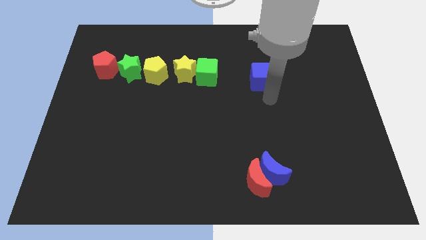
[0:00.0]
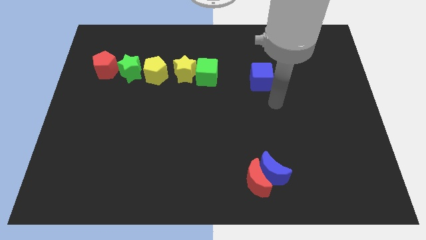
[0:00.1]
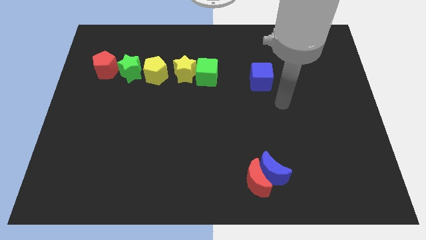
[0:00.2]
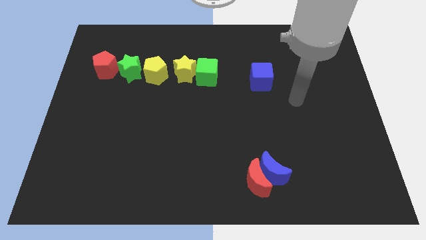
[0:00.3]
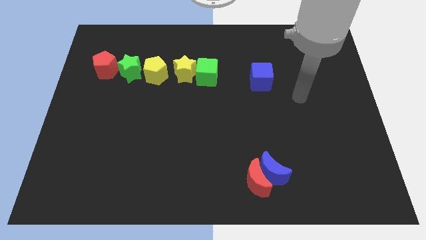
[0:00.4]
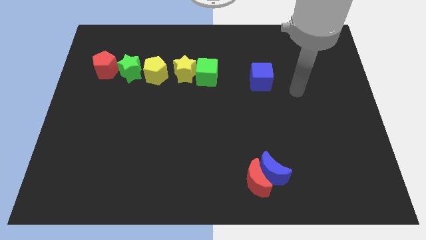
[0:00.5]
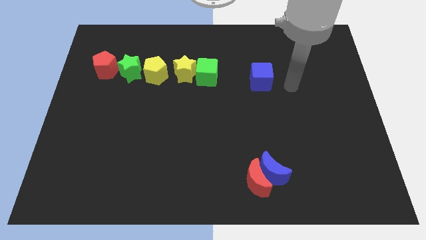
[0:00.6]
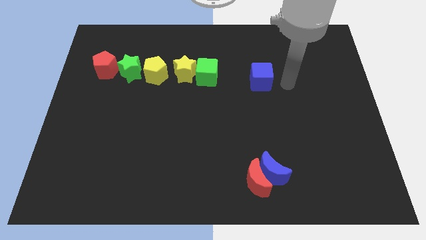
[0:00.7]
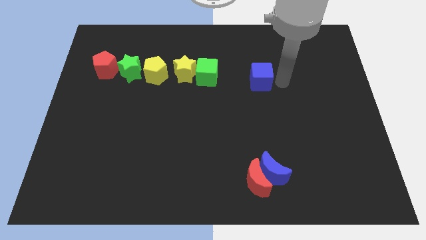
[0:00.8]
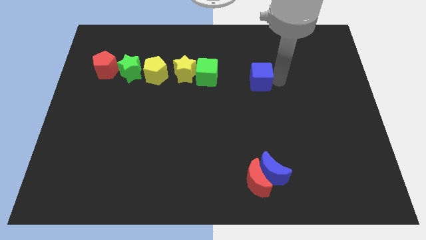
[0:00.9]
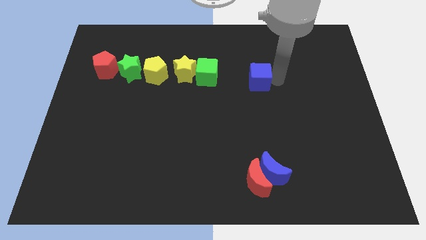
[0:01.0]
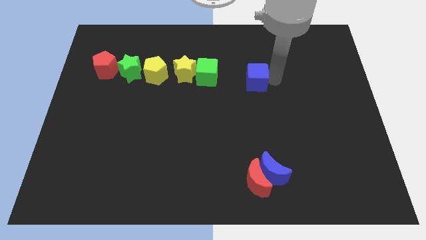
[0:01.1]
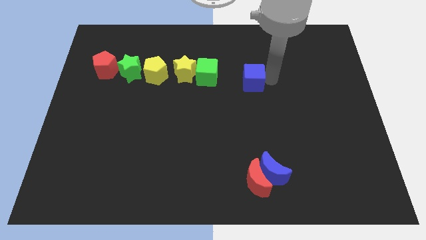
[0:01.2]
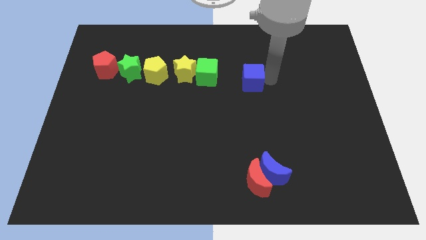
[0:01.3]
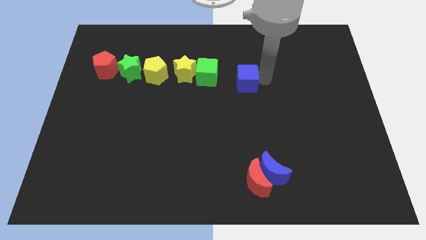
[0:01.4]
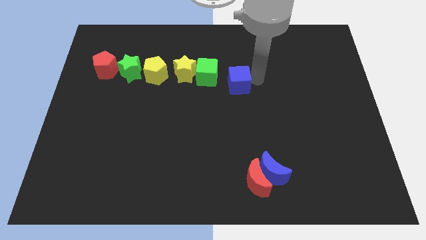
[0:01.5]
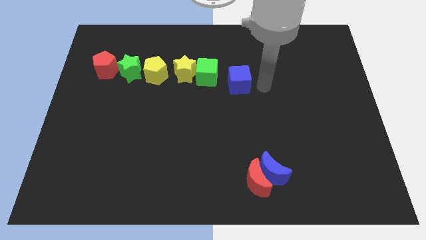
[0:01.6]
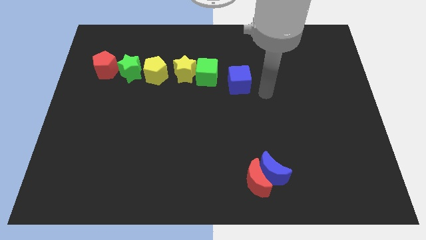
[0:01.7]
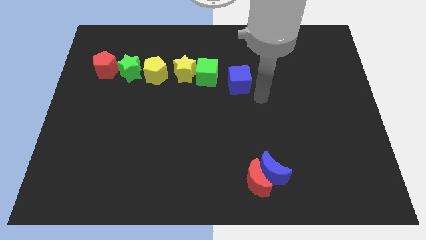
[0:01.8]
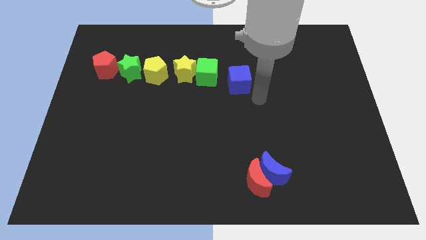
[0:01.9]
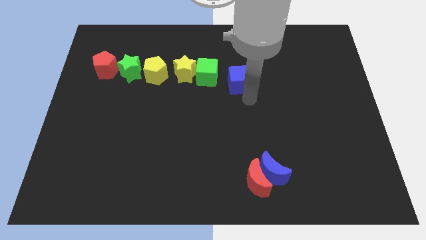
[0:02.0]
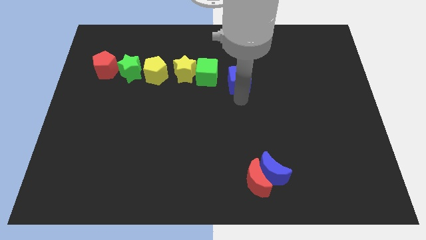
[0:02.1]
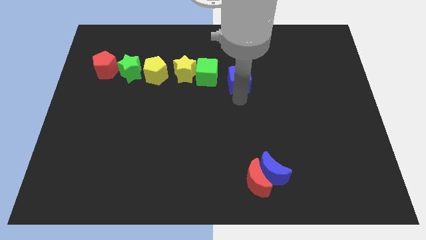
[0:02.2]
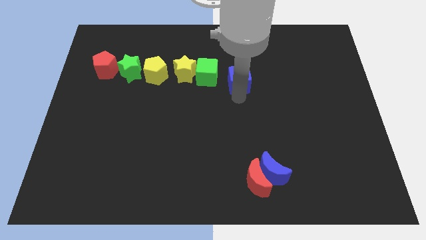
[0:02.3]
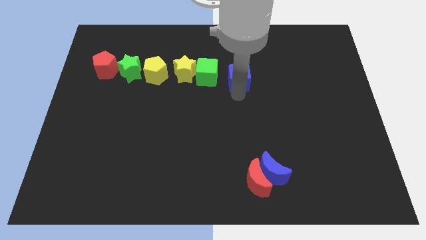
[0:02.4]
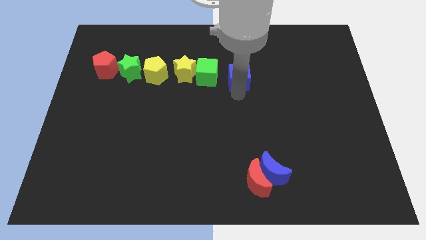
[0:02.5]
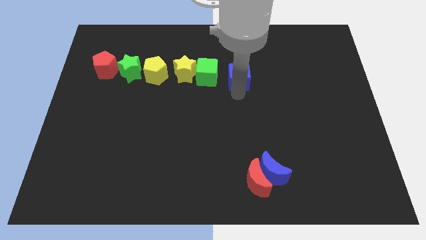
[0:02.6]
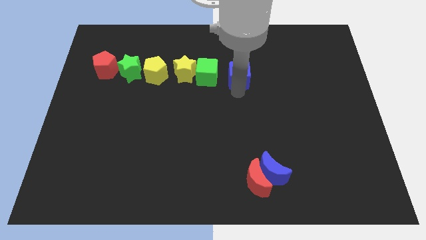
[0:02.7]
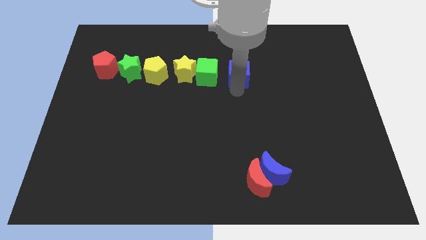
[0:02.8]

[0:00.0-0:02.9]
place blue cube beside green cube

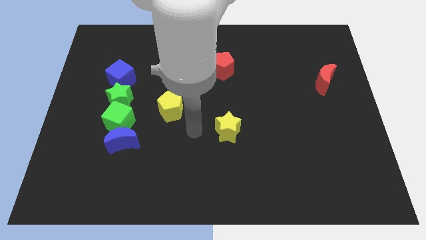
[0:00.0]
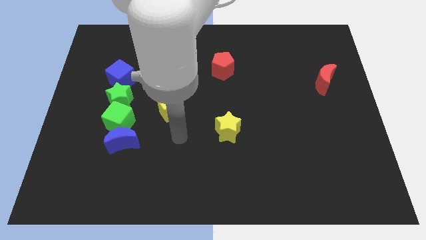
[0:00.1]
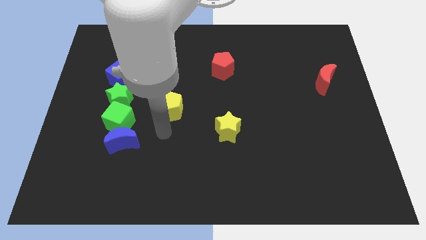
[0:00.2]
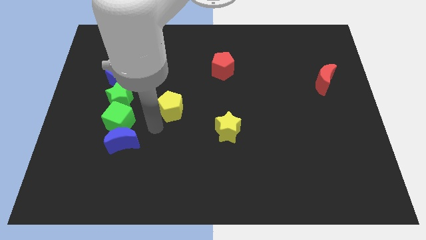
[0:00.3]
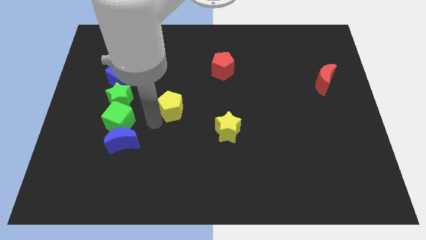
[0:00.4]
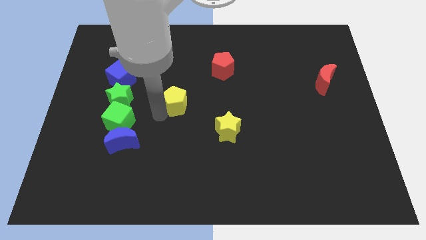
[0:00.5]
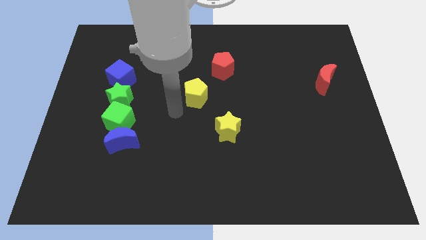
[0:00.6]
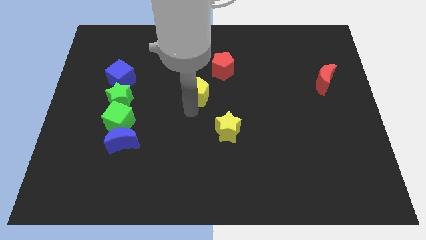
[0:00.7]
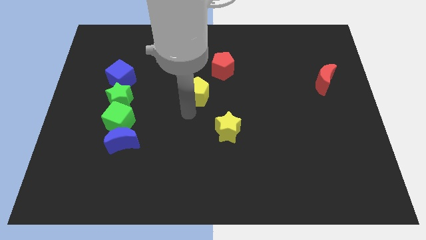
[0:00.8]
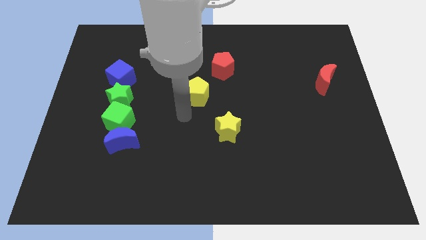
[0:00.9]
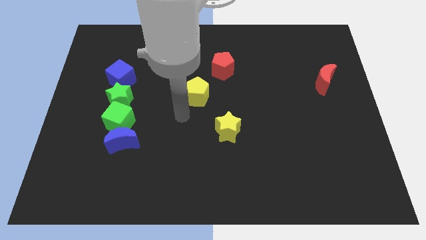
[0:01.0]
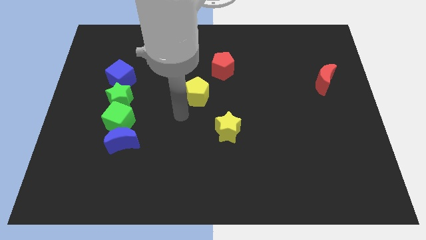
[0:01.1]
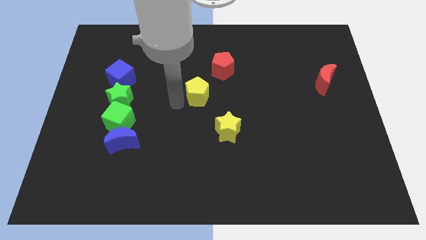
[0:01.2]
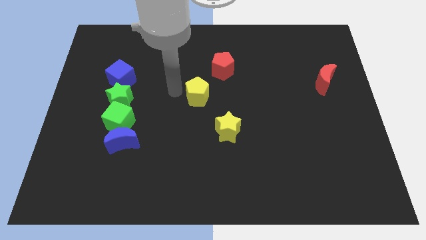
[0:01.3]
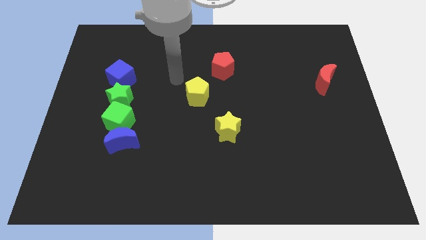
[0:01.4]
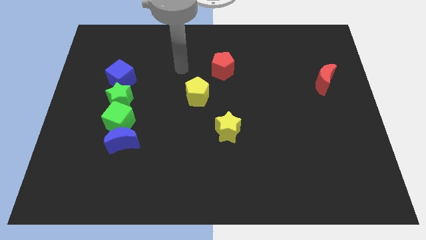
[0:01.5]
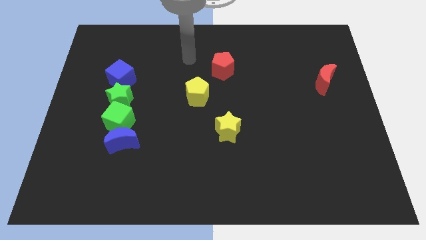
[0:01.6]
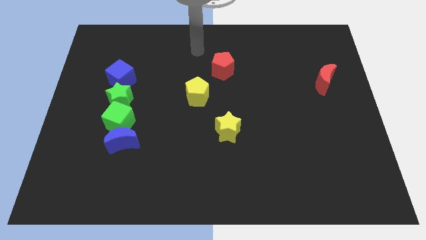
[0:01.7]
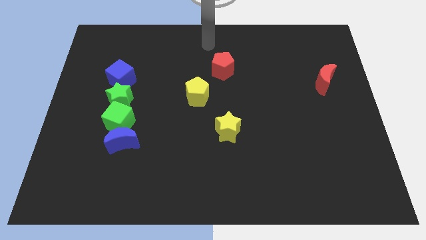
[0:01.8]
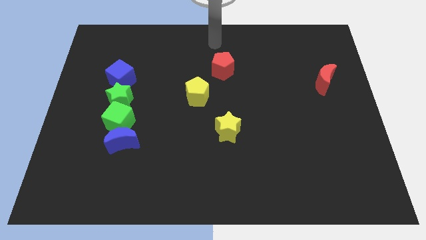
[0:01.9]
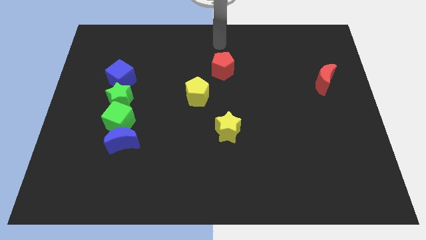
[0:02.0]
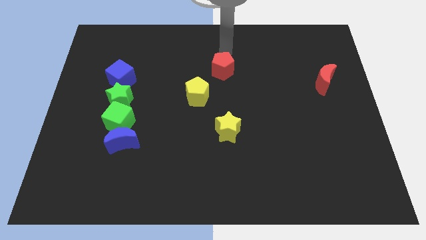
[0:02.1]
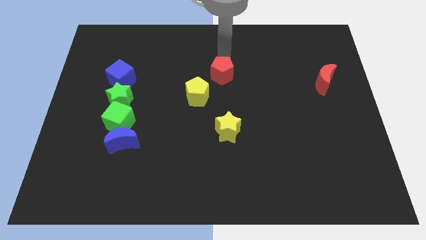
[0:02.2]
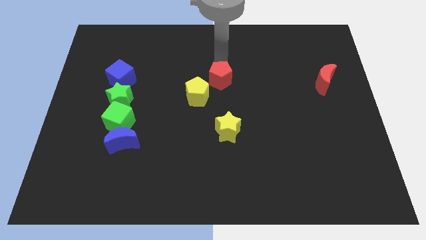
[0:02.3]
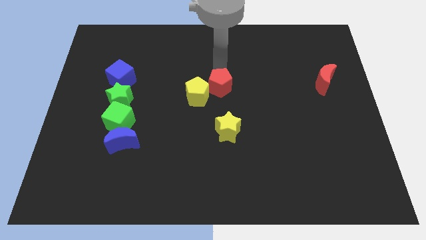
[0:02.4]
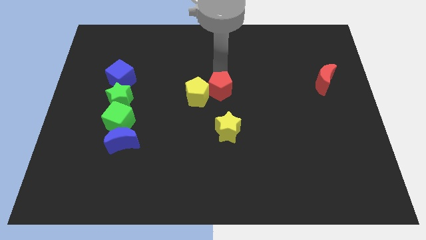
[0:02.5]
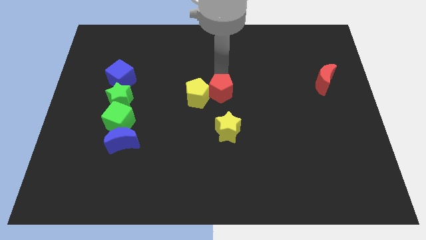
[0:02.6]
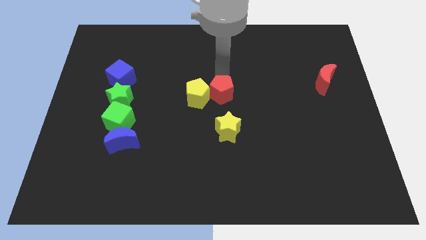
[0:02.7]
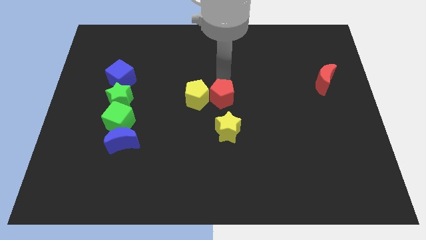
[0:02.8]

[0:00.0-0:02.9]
move the red pentagon to the right of yellow pentagon

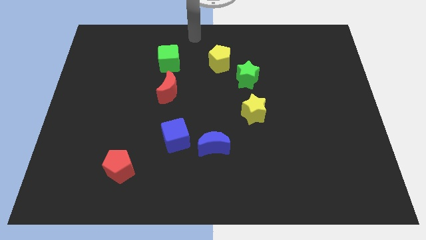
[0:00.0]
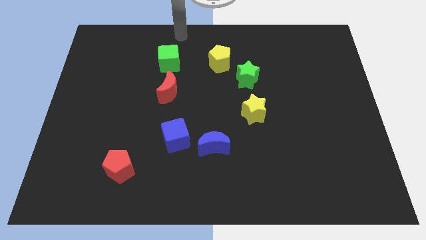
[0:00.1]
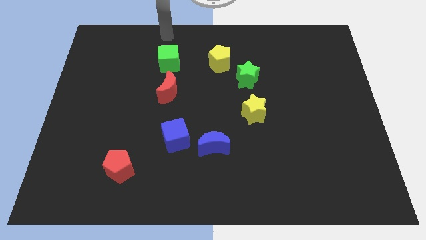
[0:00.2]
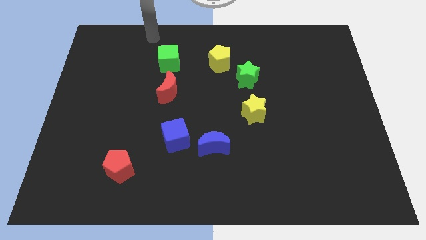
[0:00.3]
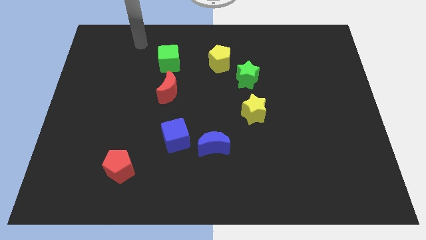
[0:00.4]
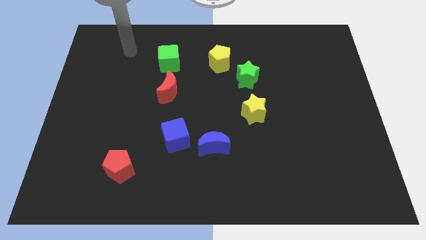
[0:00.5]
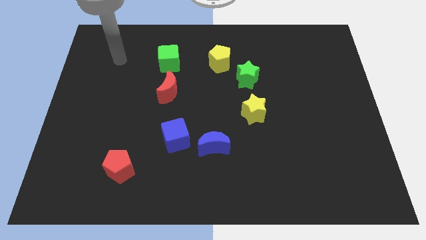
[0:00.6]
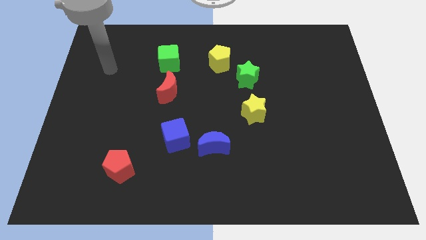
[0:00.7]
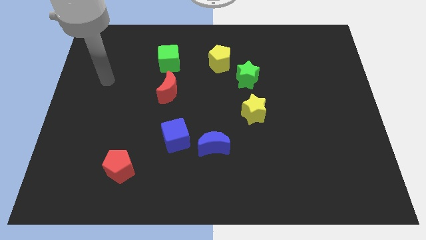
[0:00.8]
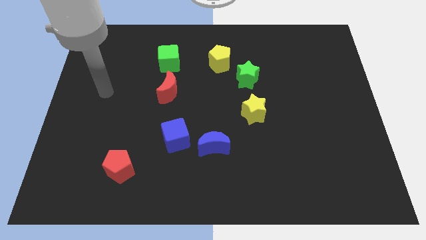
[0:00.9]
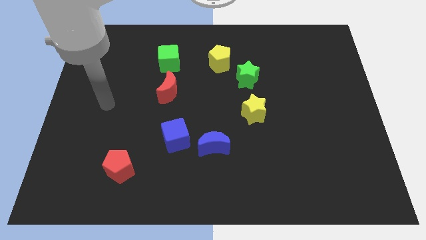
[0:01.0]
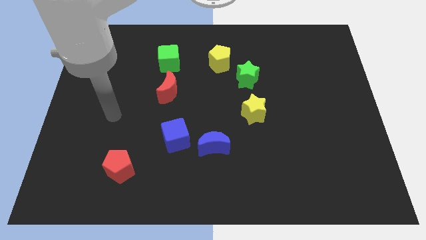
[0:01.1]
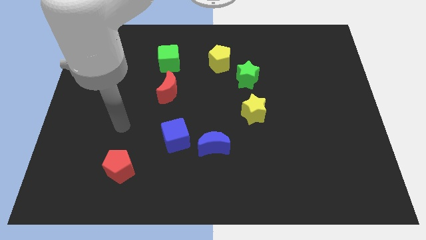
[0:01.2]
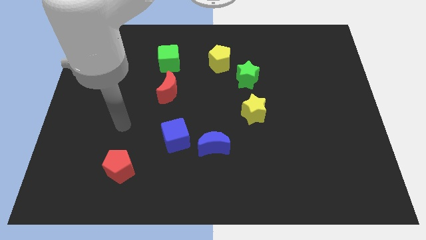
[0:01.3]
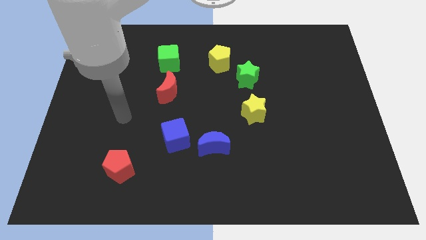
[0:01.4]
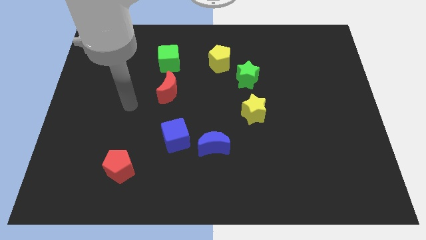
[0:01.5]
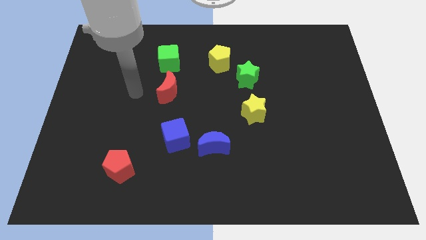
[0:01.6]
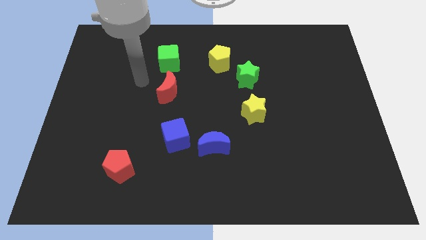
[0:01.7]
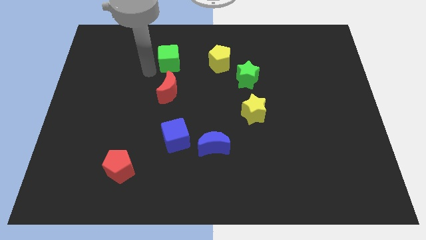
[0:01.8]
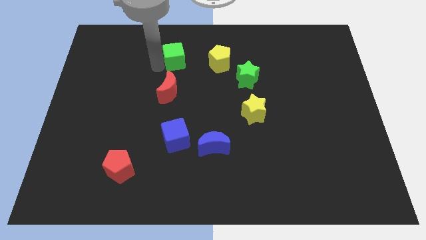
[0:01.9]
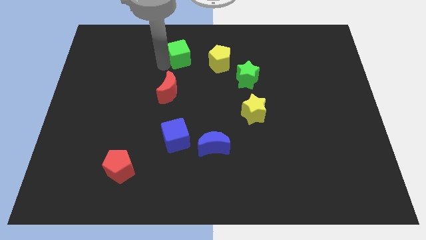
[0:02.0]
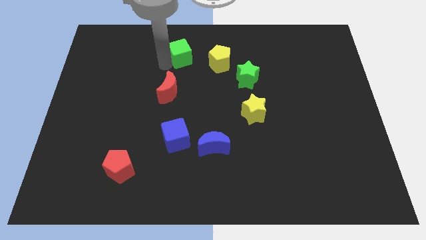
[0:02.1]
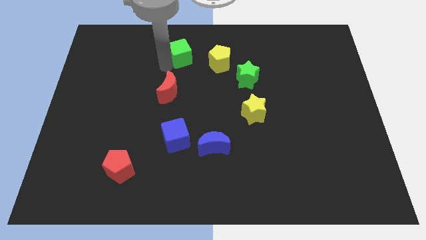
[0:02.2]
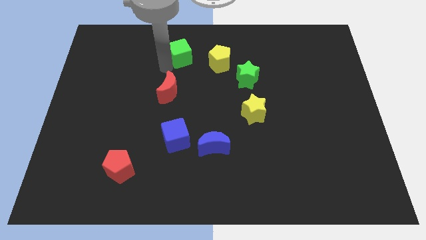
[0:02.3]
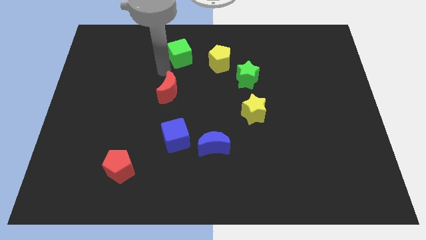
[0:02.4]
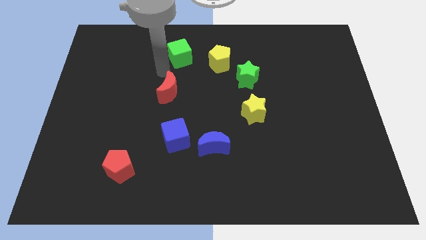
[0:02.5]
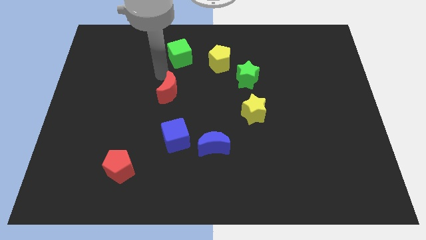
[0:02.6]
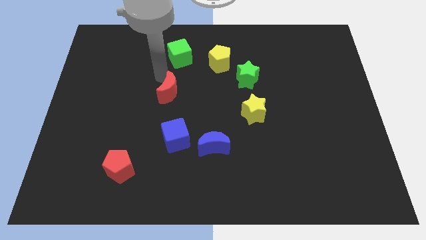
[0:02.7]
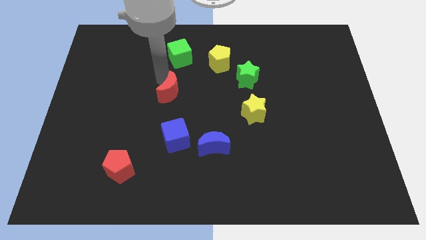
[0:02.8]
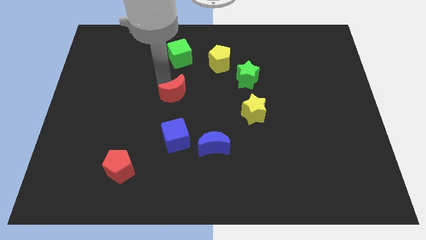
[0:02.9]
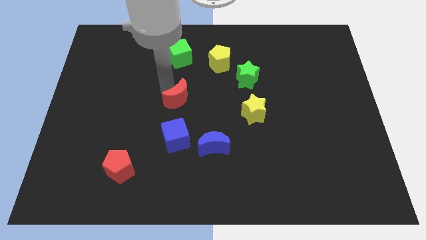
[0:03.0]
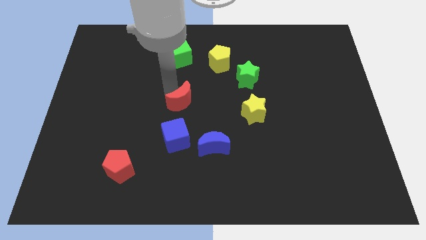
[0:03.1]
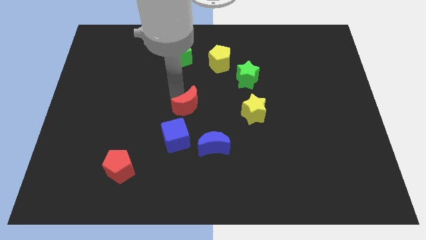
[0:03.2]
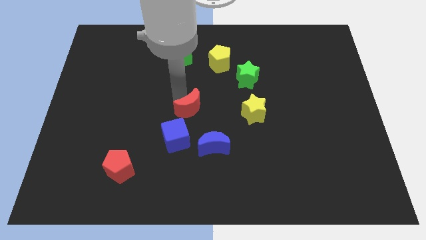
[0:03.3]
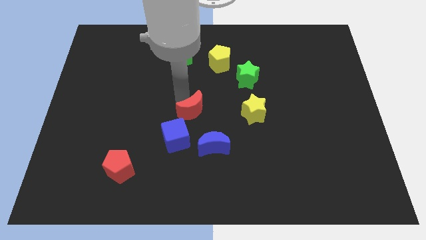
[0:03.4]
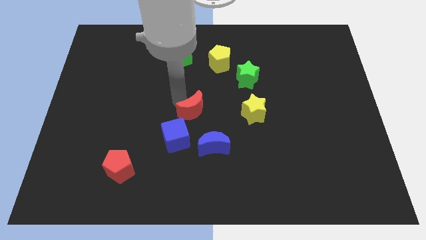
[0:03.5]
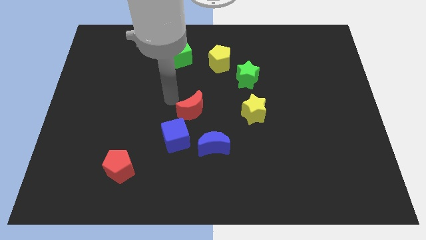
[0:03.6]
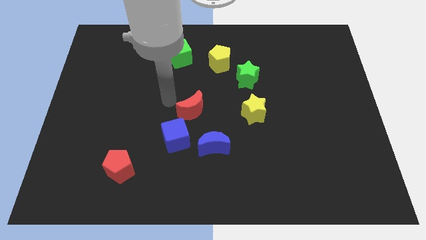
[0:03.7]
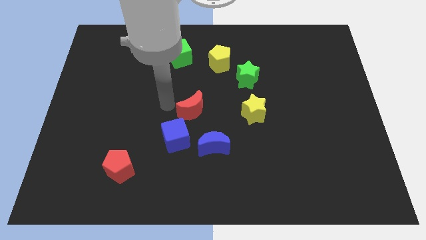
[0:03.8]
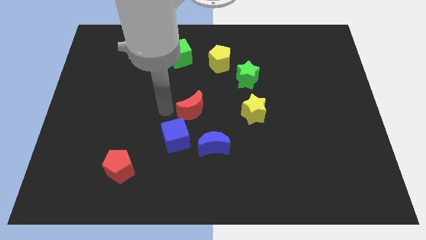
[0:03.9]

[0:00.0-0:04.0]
move the red crescent on the top right side of the blue cube
